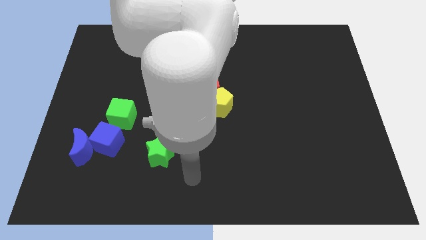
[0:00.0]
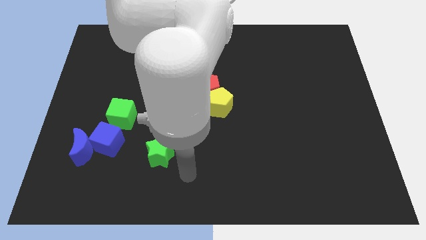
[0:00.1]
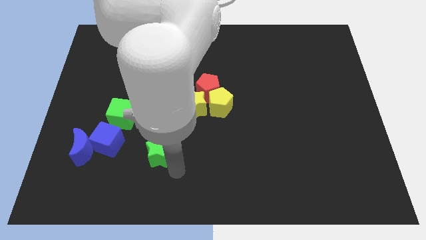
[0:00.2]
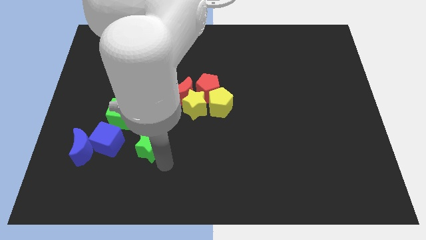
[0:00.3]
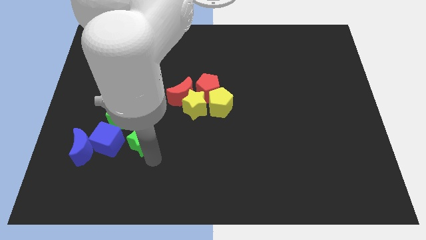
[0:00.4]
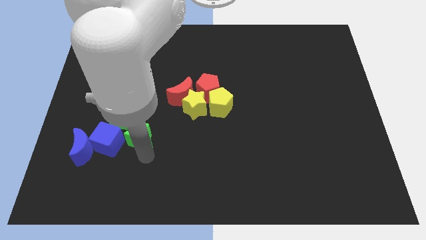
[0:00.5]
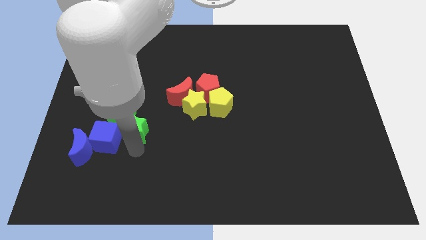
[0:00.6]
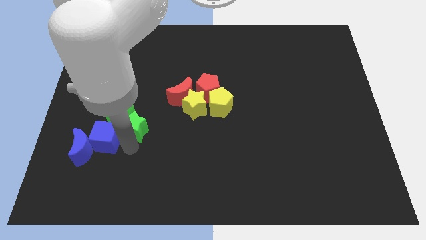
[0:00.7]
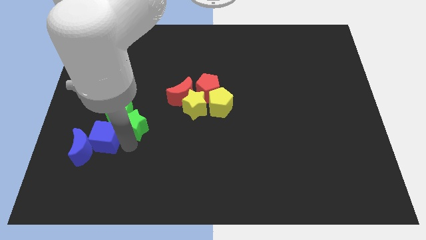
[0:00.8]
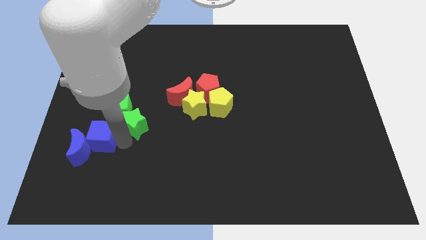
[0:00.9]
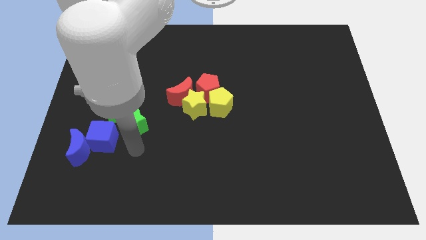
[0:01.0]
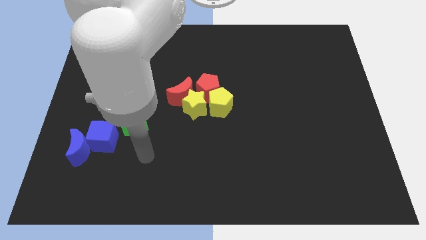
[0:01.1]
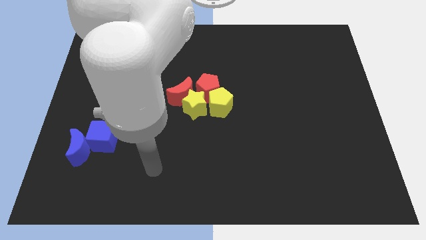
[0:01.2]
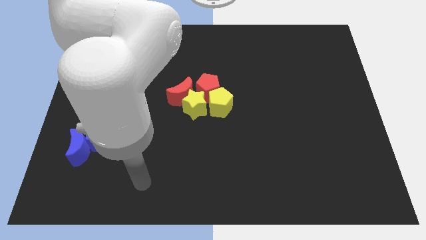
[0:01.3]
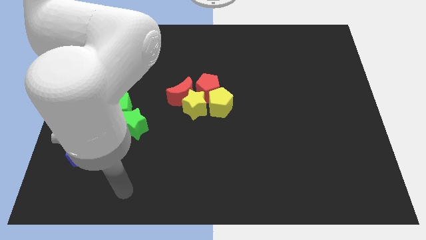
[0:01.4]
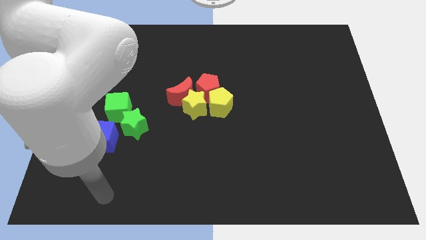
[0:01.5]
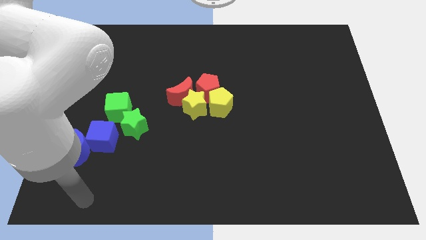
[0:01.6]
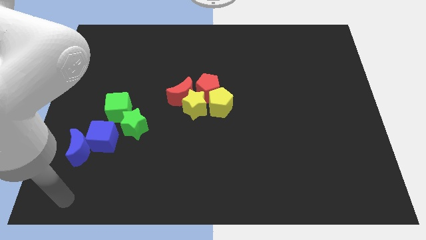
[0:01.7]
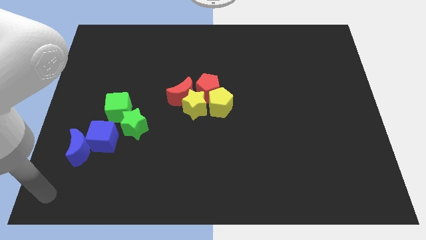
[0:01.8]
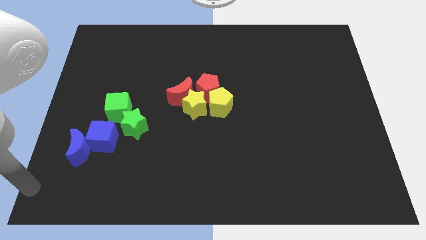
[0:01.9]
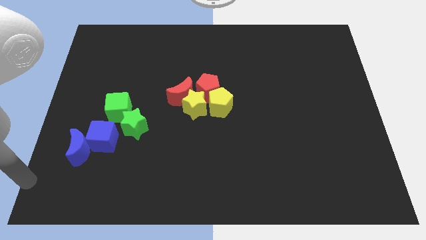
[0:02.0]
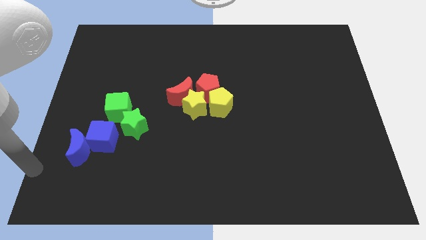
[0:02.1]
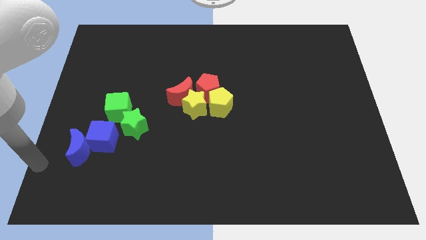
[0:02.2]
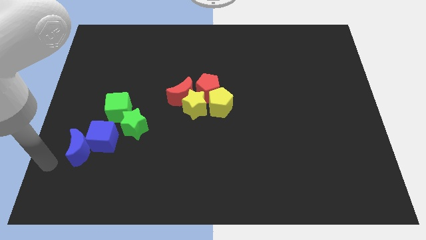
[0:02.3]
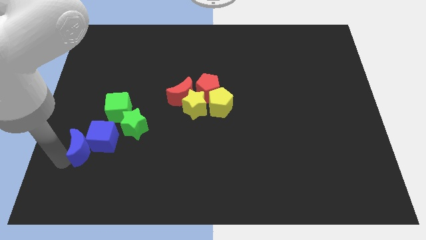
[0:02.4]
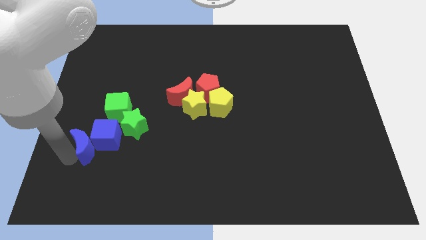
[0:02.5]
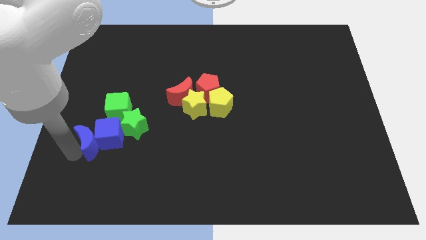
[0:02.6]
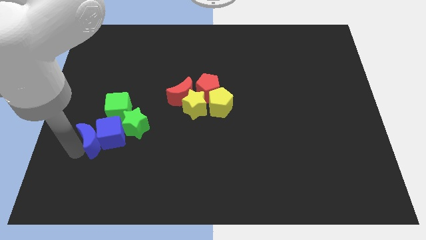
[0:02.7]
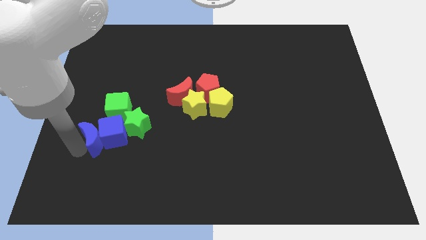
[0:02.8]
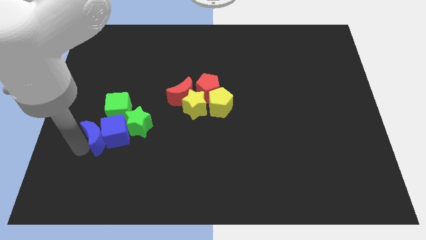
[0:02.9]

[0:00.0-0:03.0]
move the green star into the green cube

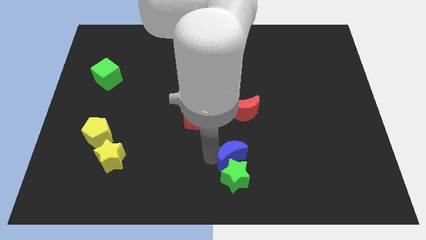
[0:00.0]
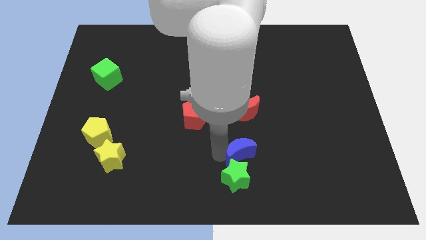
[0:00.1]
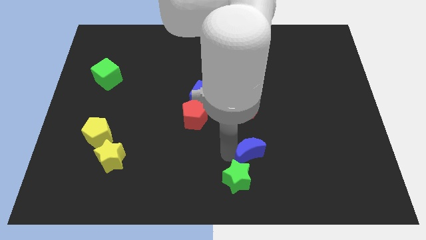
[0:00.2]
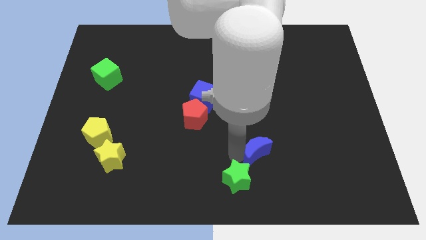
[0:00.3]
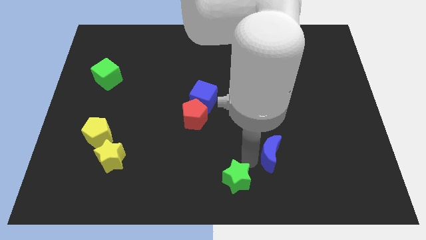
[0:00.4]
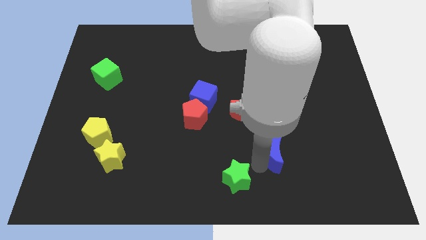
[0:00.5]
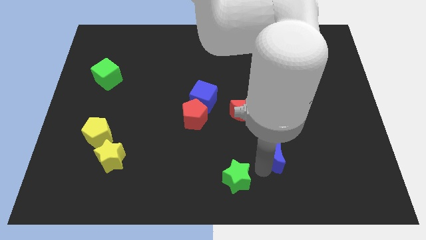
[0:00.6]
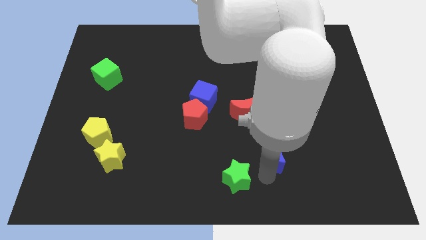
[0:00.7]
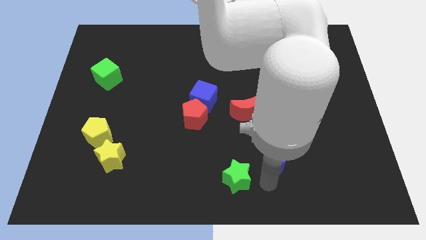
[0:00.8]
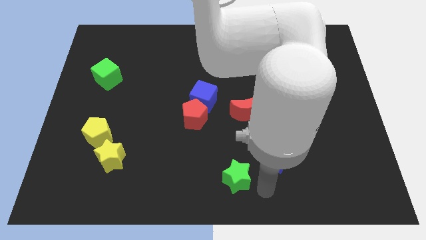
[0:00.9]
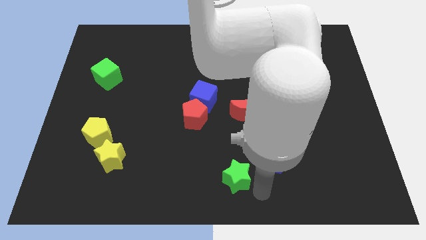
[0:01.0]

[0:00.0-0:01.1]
place the blue moon to the top right side of the green star

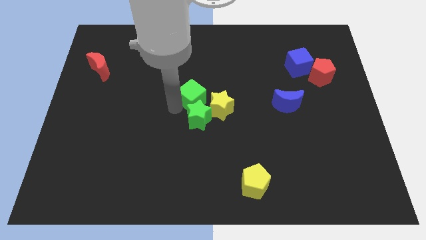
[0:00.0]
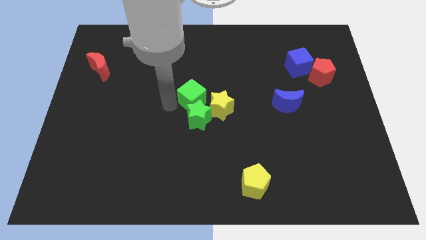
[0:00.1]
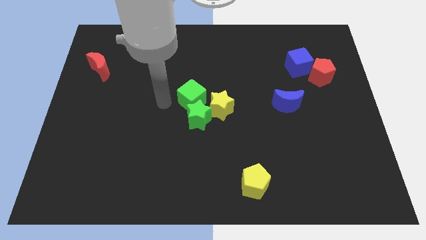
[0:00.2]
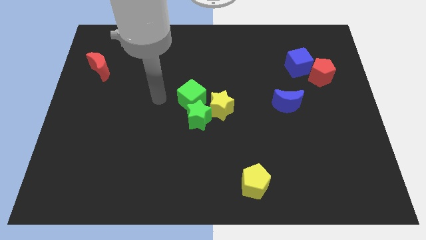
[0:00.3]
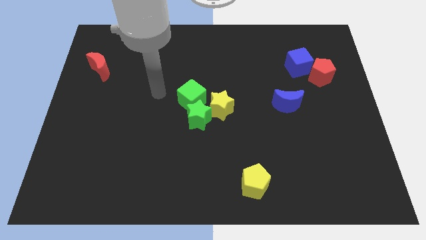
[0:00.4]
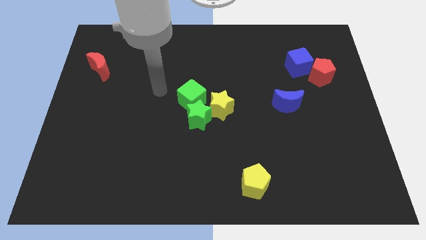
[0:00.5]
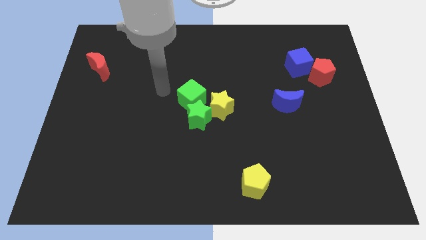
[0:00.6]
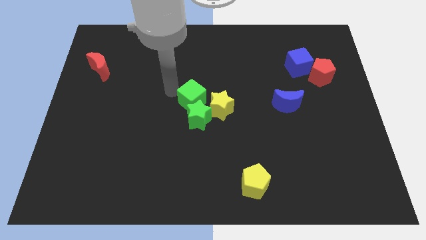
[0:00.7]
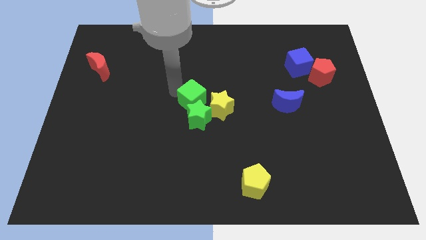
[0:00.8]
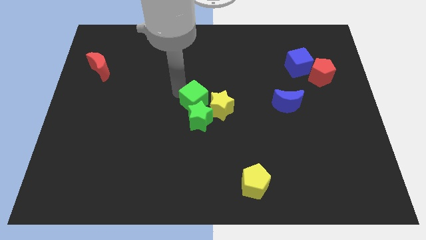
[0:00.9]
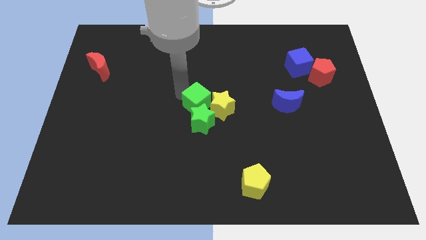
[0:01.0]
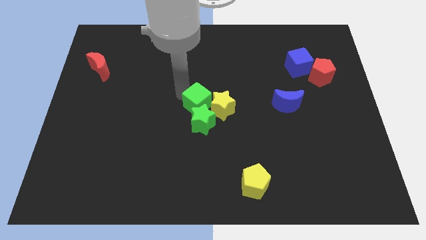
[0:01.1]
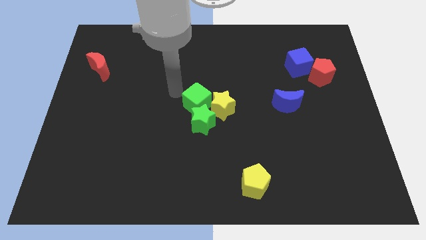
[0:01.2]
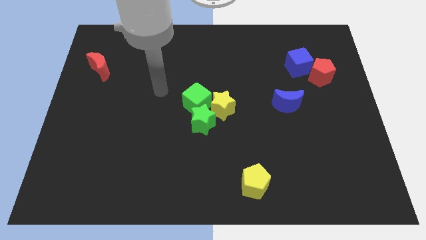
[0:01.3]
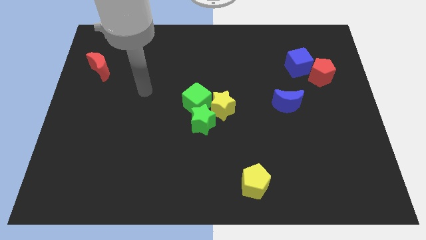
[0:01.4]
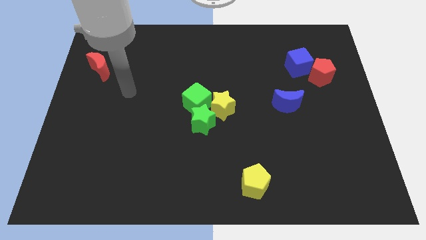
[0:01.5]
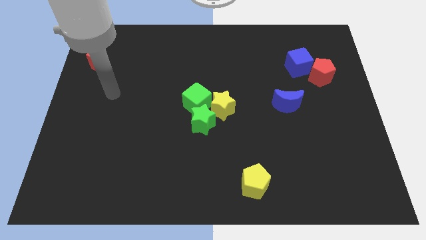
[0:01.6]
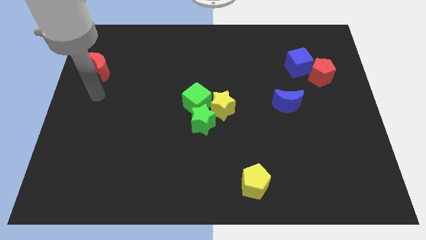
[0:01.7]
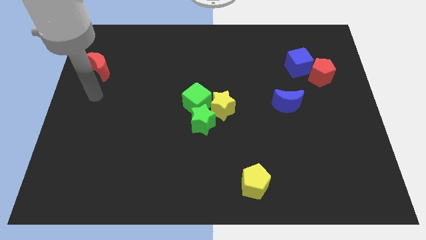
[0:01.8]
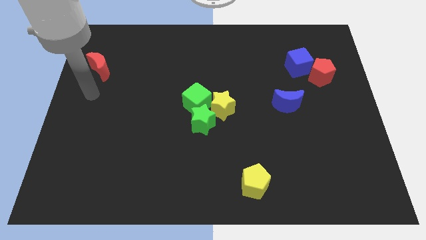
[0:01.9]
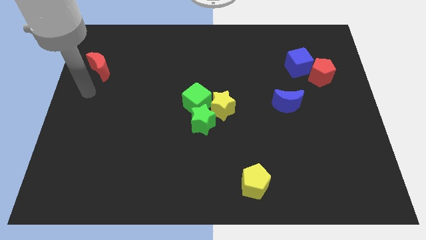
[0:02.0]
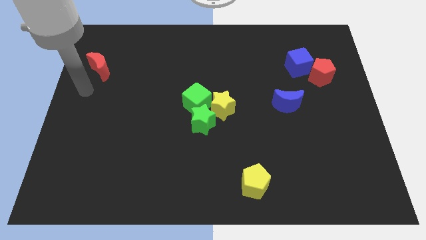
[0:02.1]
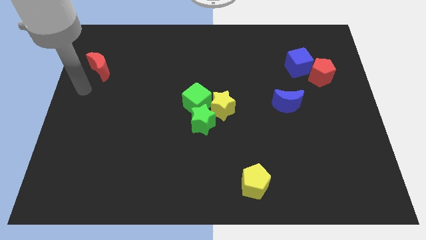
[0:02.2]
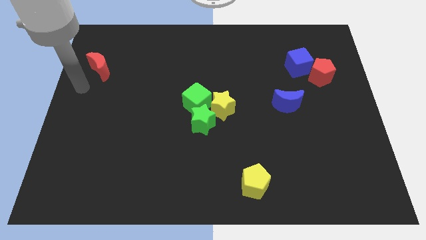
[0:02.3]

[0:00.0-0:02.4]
move your arm towards the red moon

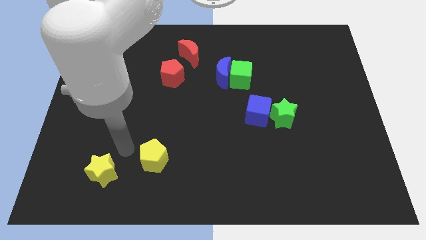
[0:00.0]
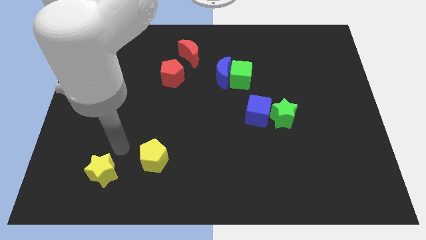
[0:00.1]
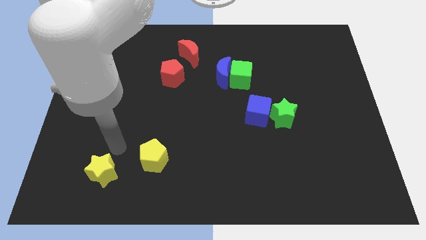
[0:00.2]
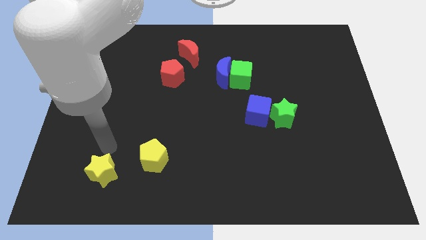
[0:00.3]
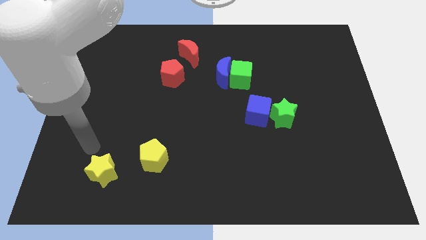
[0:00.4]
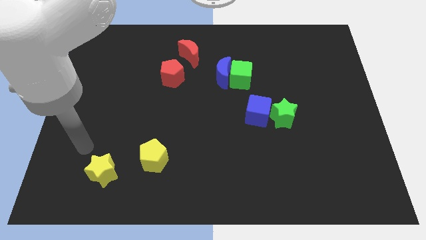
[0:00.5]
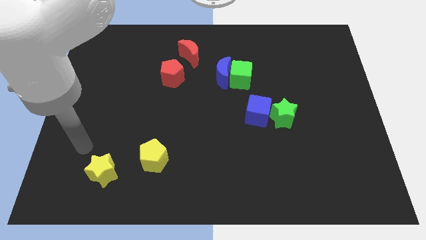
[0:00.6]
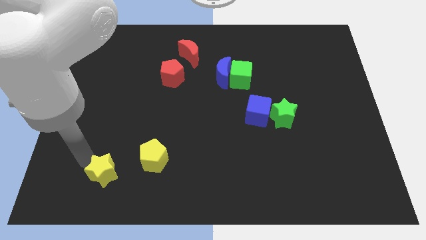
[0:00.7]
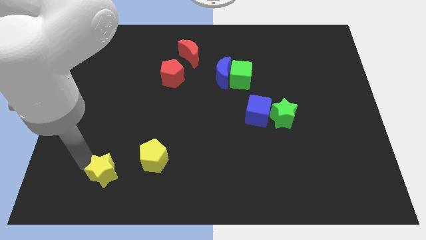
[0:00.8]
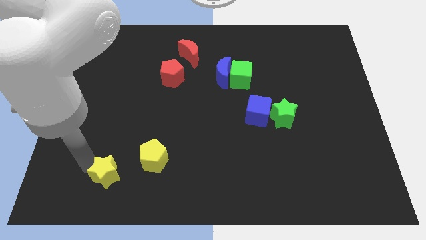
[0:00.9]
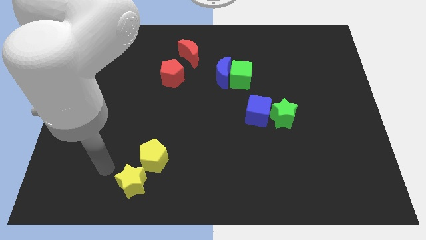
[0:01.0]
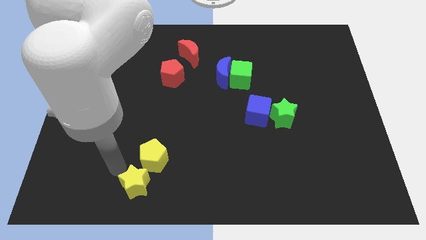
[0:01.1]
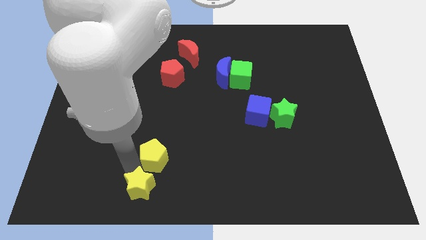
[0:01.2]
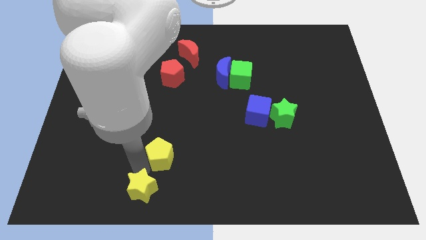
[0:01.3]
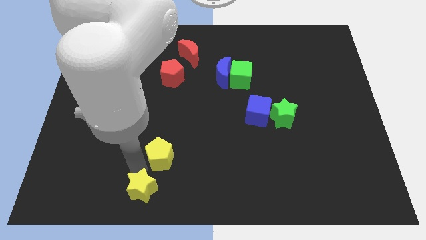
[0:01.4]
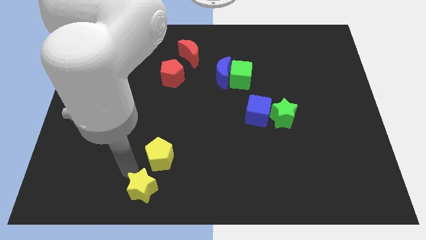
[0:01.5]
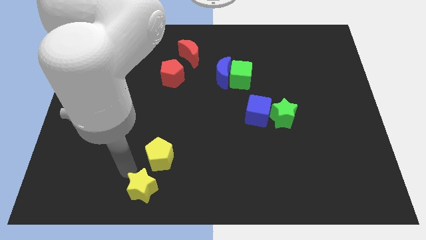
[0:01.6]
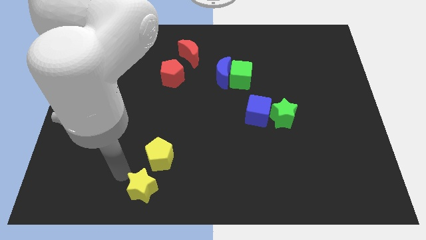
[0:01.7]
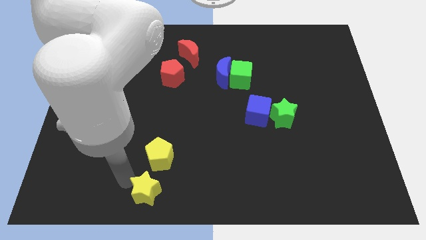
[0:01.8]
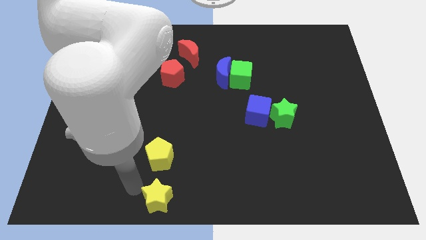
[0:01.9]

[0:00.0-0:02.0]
place the yellow star below the yellow pentagon

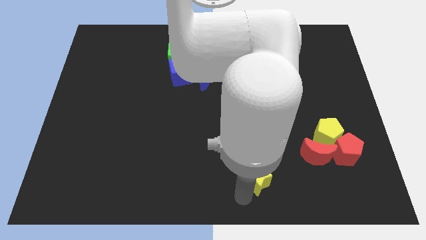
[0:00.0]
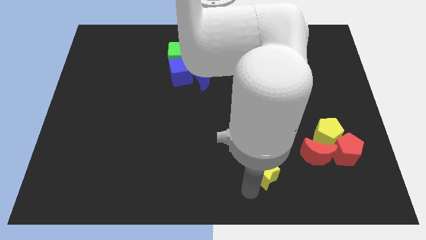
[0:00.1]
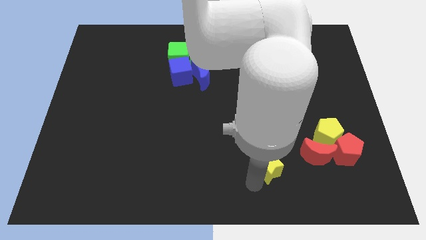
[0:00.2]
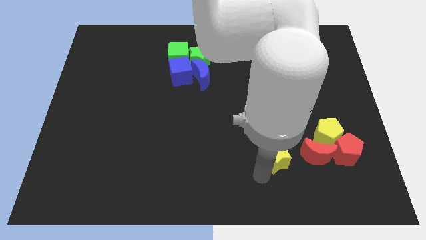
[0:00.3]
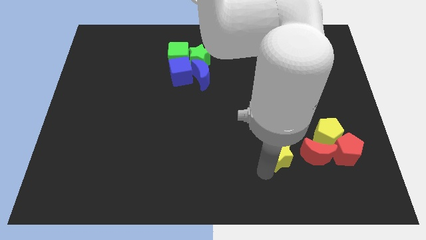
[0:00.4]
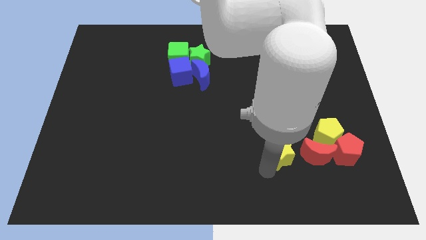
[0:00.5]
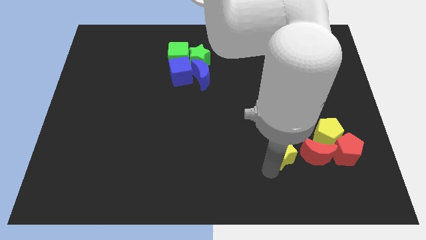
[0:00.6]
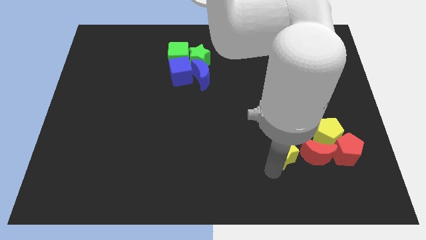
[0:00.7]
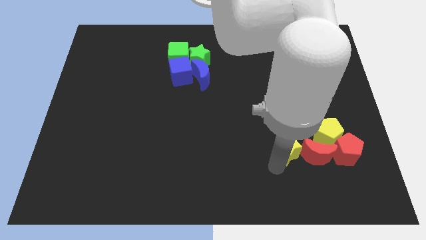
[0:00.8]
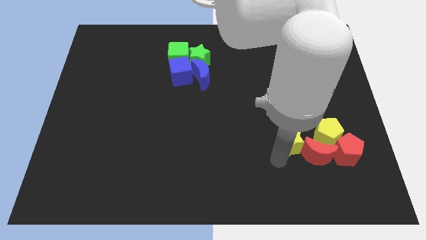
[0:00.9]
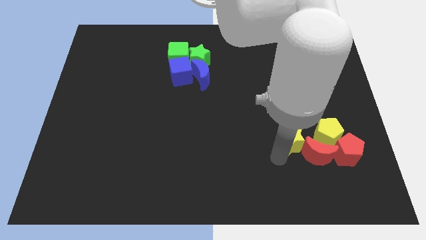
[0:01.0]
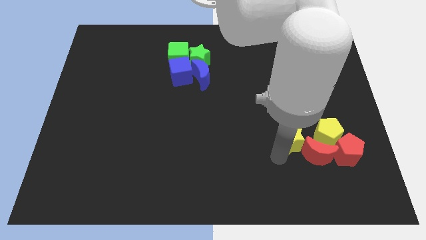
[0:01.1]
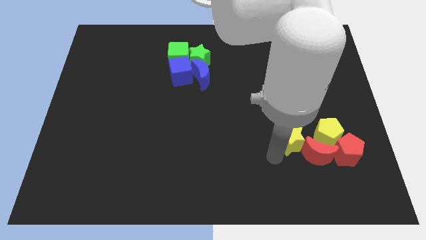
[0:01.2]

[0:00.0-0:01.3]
move the yellow star into the left side of the red moon
